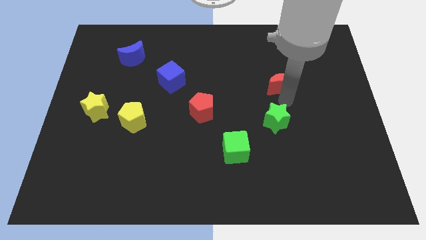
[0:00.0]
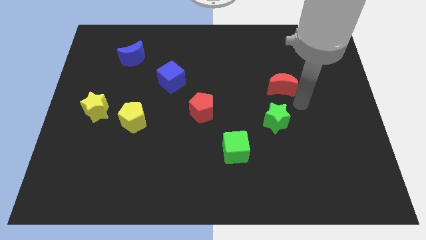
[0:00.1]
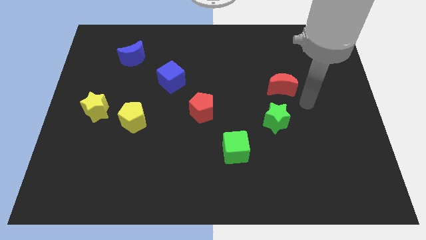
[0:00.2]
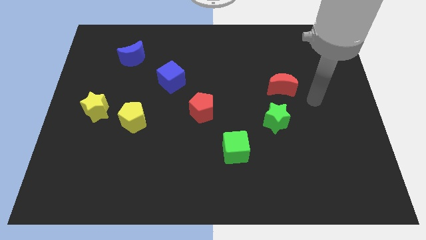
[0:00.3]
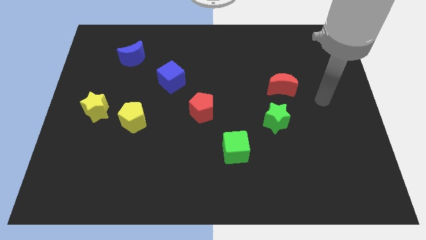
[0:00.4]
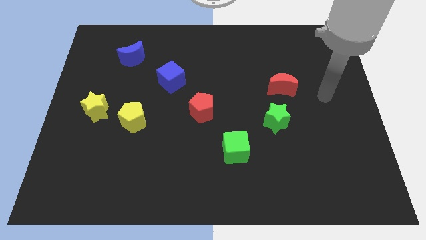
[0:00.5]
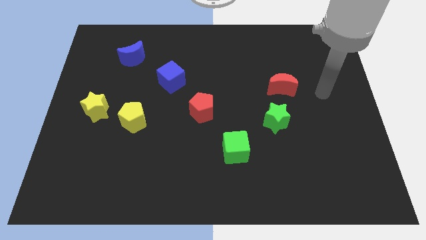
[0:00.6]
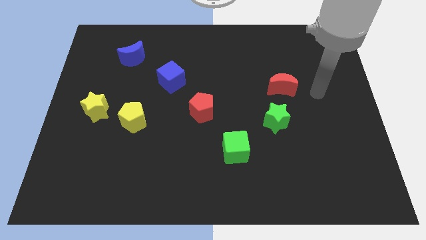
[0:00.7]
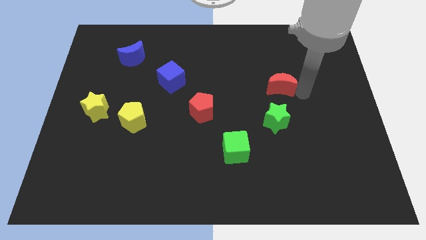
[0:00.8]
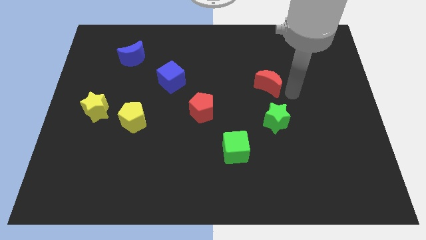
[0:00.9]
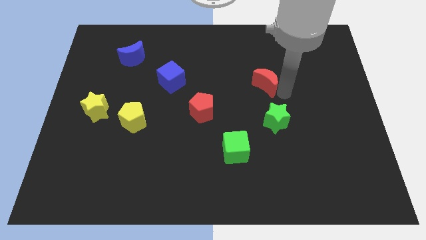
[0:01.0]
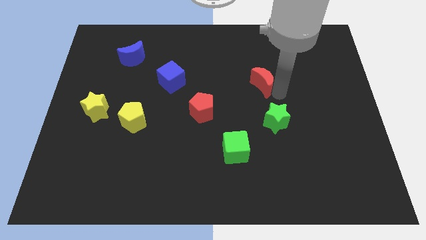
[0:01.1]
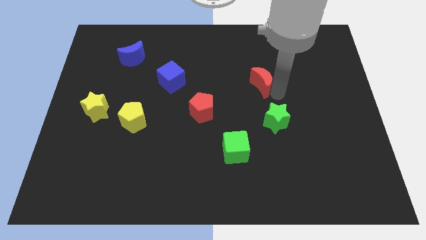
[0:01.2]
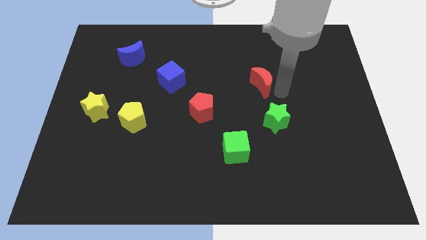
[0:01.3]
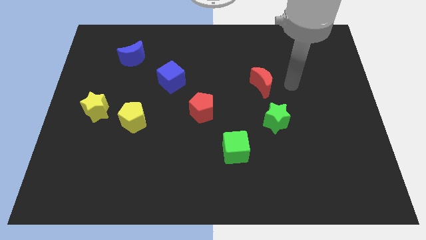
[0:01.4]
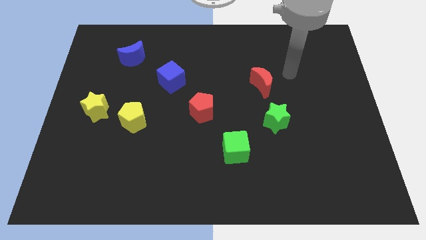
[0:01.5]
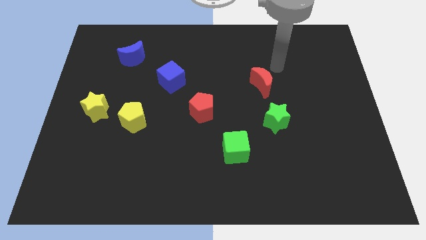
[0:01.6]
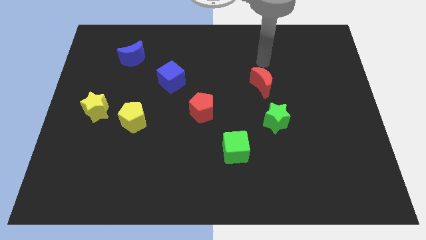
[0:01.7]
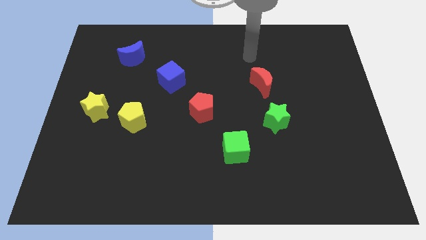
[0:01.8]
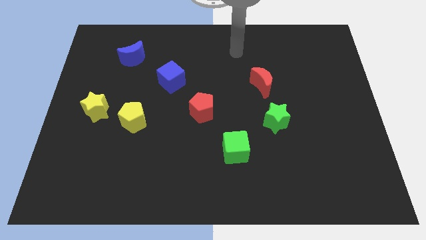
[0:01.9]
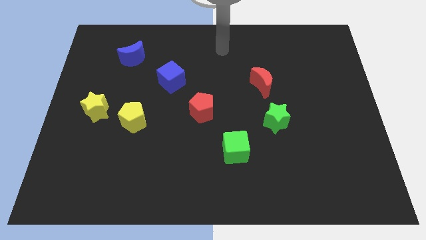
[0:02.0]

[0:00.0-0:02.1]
move the red crescent slightly towards left

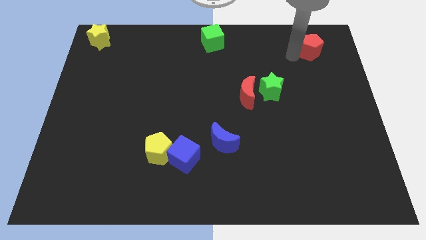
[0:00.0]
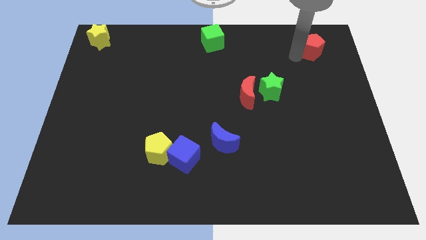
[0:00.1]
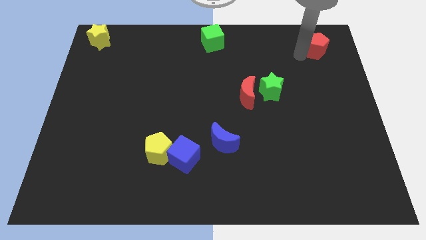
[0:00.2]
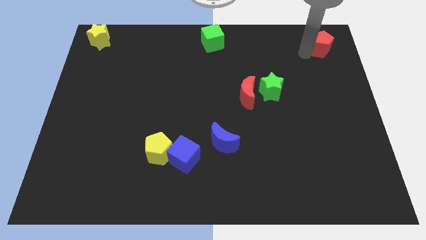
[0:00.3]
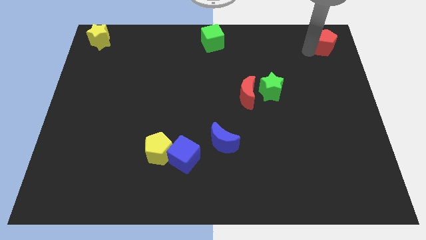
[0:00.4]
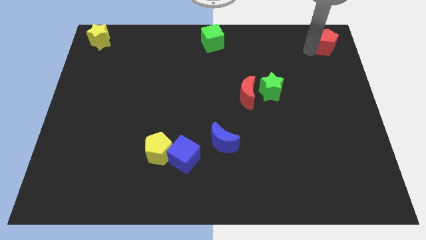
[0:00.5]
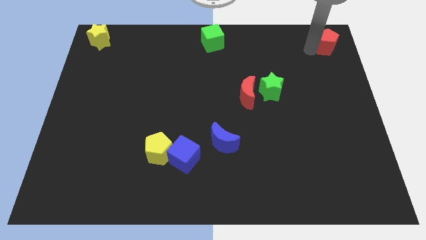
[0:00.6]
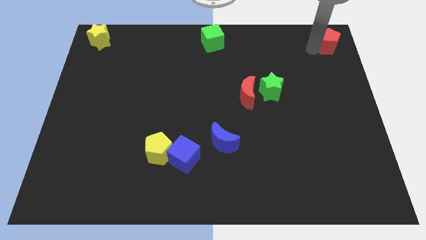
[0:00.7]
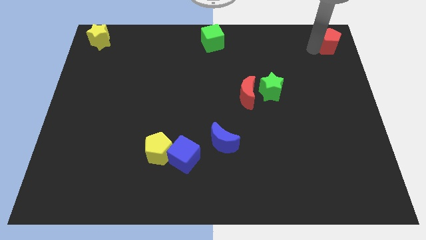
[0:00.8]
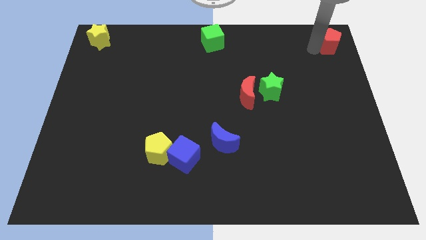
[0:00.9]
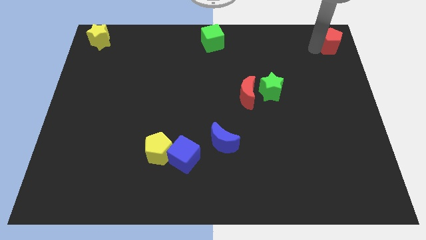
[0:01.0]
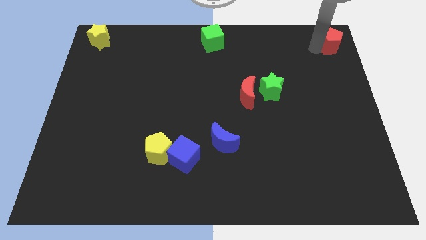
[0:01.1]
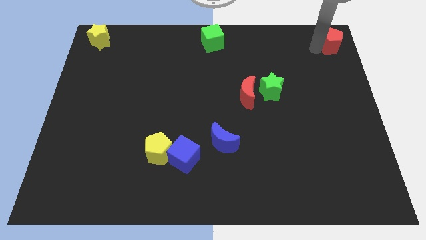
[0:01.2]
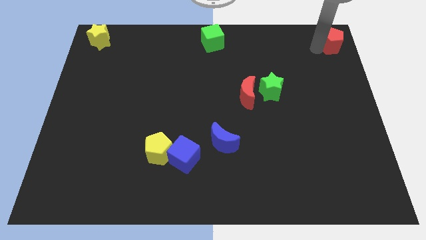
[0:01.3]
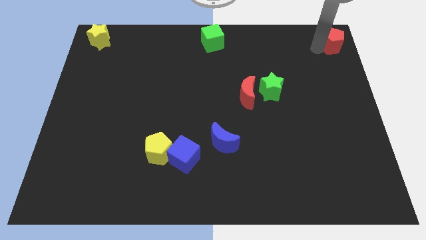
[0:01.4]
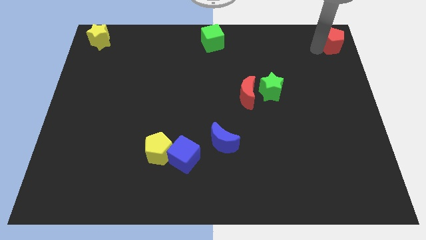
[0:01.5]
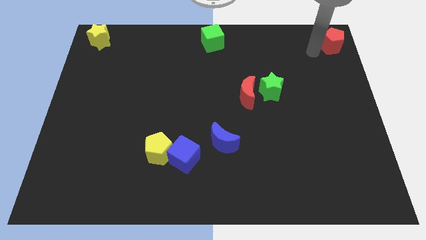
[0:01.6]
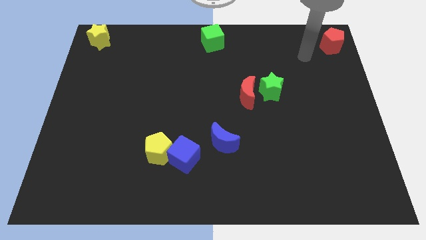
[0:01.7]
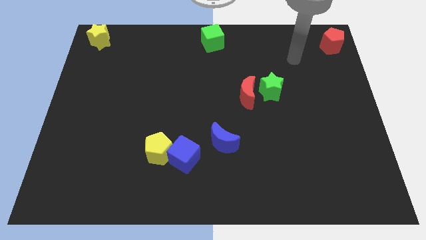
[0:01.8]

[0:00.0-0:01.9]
push the red pentagon to the top right corner of the board

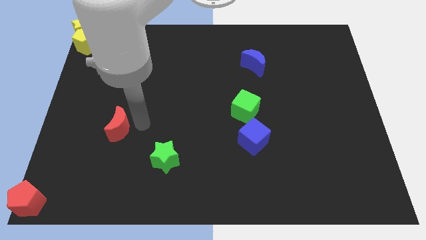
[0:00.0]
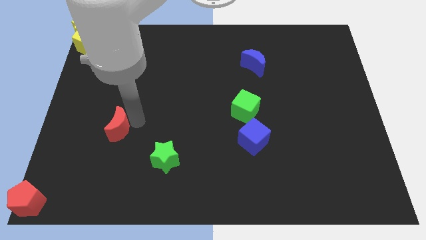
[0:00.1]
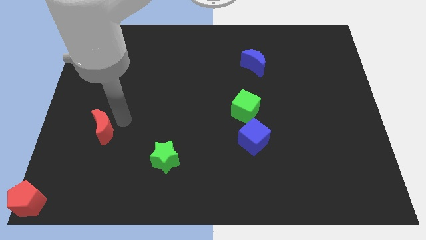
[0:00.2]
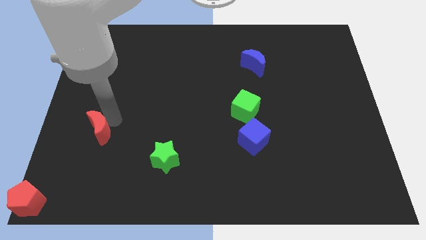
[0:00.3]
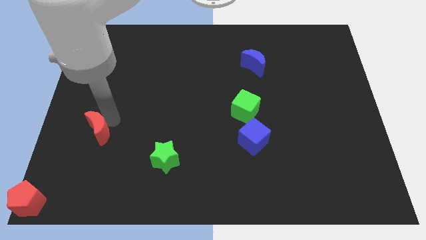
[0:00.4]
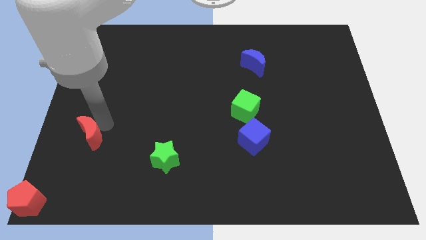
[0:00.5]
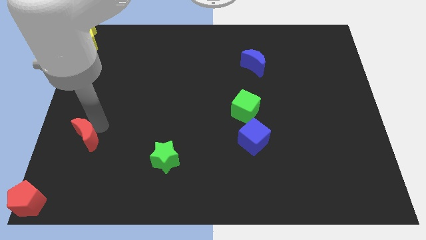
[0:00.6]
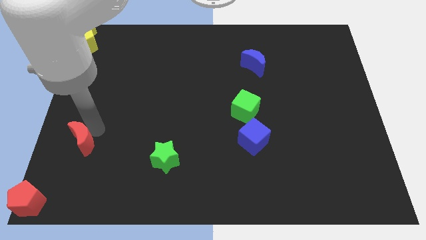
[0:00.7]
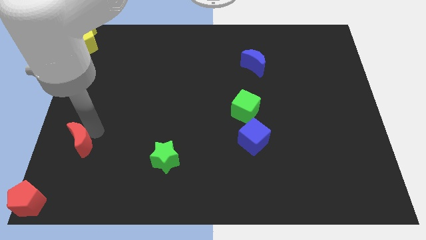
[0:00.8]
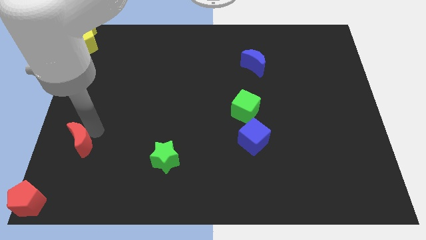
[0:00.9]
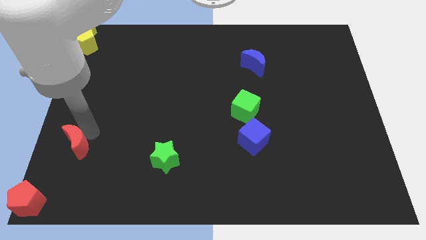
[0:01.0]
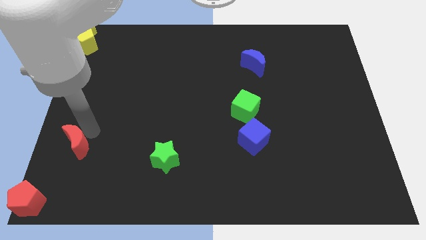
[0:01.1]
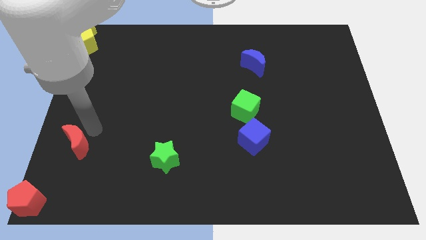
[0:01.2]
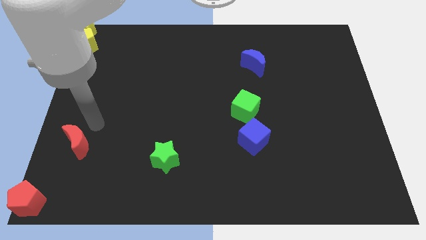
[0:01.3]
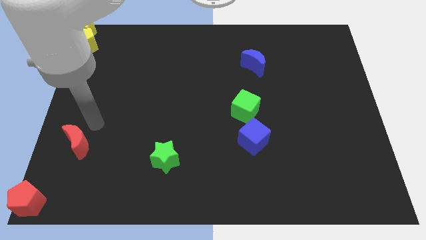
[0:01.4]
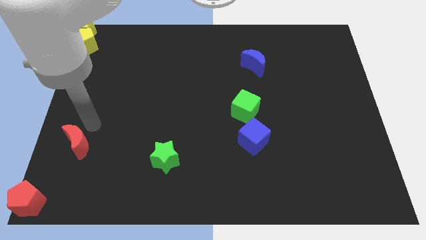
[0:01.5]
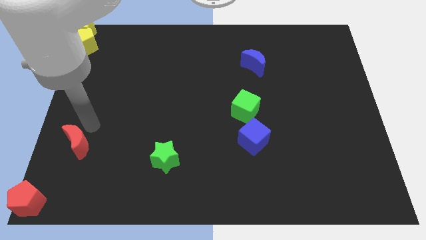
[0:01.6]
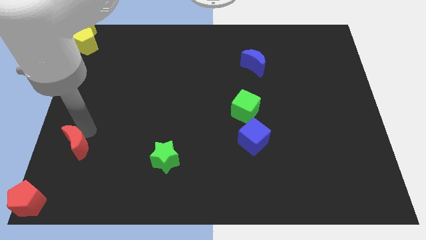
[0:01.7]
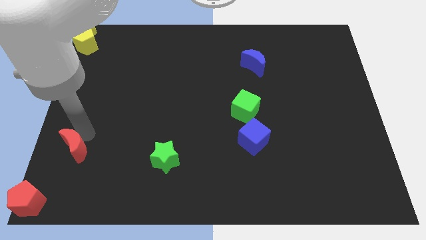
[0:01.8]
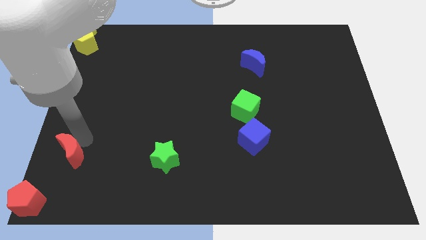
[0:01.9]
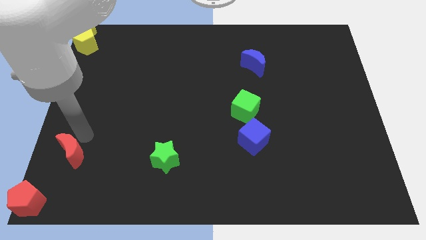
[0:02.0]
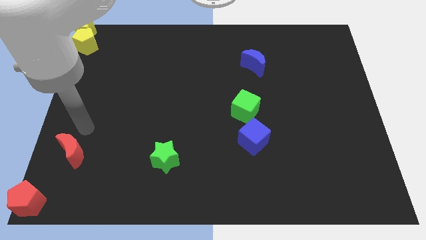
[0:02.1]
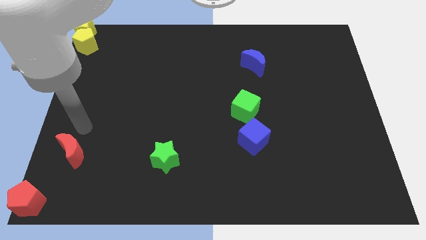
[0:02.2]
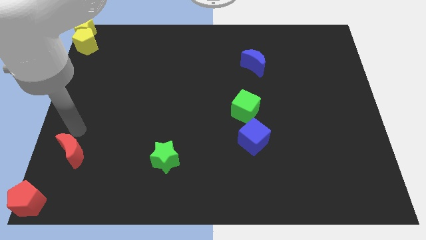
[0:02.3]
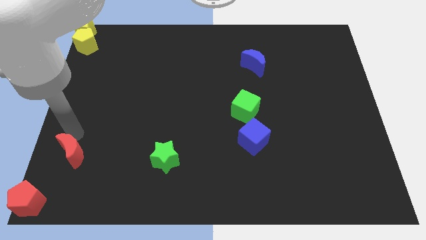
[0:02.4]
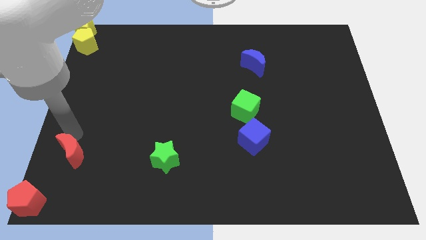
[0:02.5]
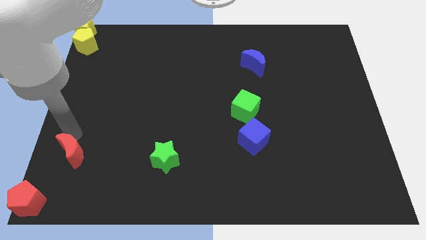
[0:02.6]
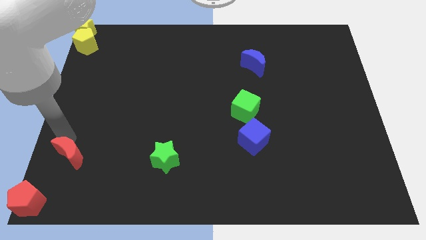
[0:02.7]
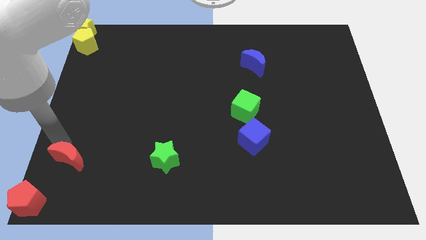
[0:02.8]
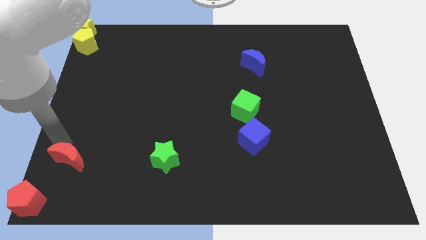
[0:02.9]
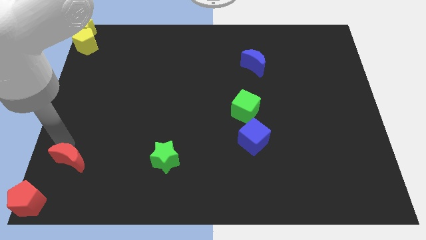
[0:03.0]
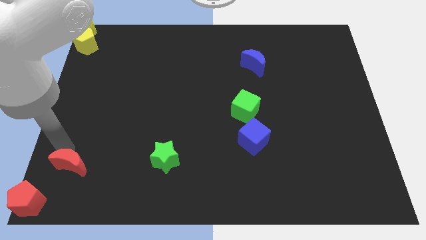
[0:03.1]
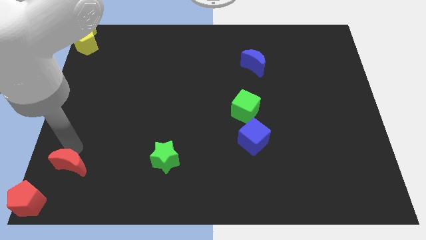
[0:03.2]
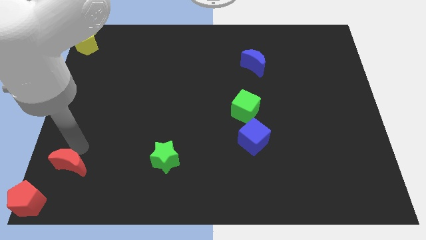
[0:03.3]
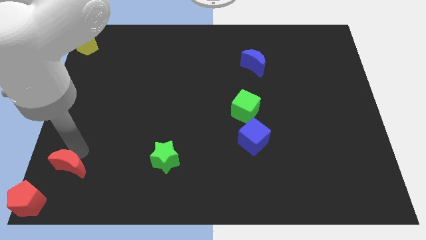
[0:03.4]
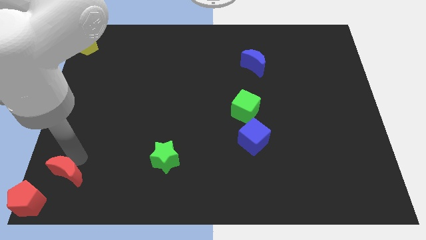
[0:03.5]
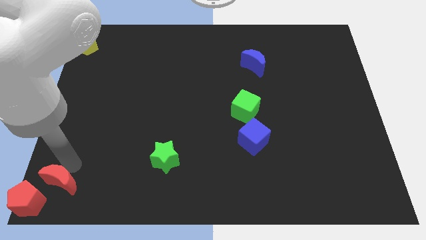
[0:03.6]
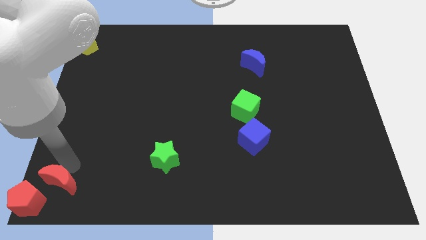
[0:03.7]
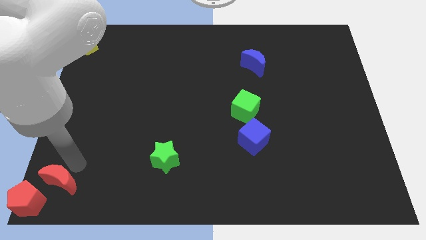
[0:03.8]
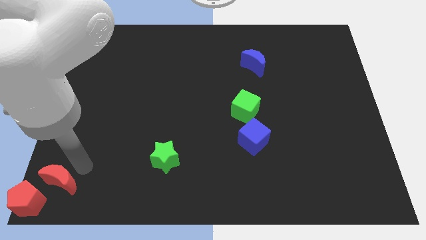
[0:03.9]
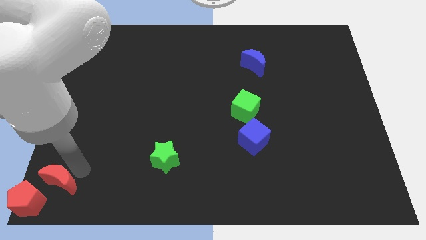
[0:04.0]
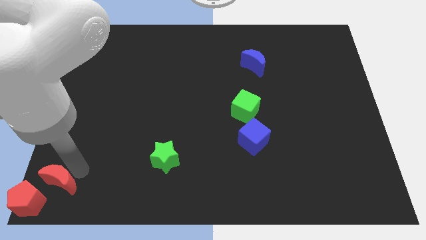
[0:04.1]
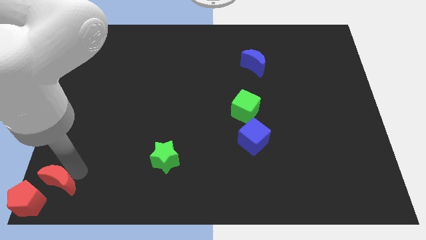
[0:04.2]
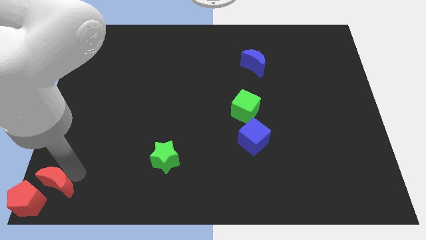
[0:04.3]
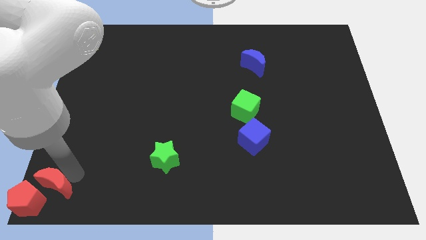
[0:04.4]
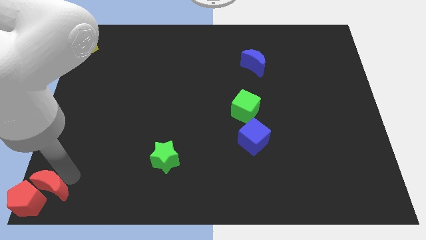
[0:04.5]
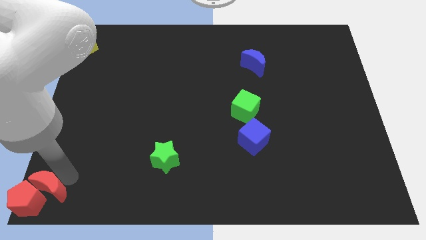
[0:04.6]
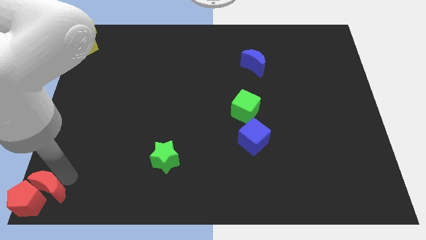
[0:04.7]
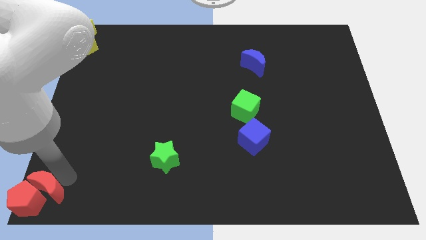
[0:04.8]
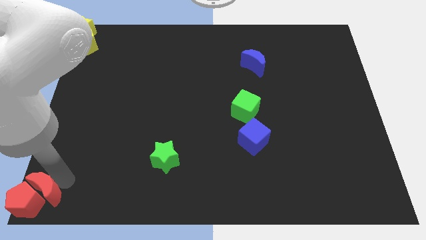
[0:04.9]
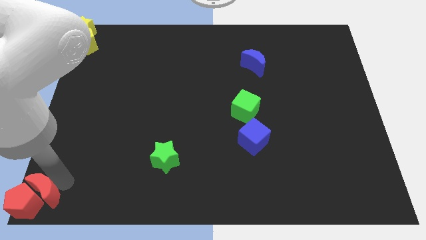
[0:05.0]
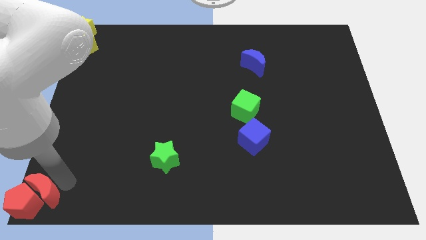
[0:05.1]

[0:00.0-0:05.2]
push the red crescent to the right of the red pentagon
